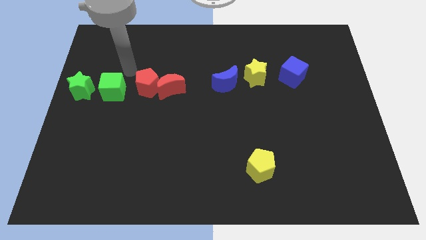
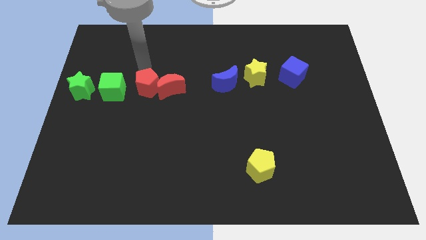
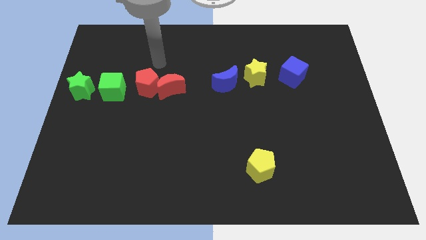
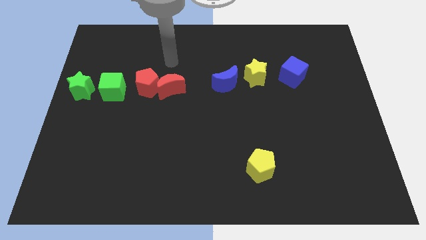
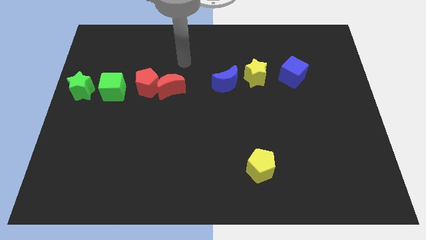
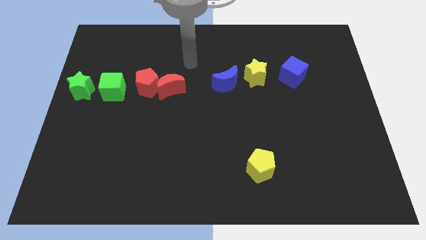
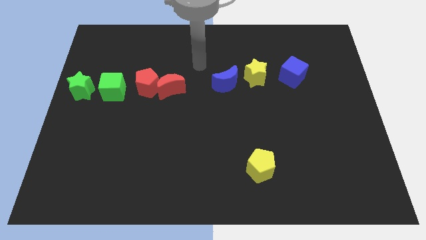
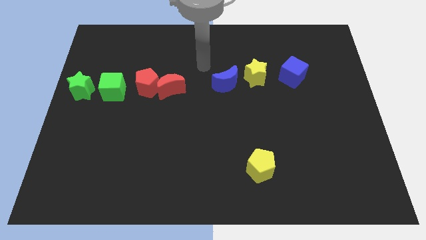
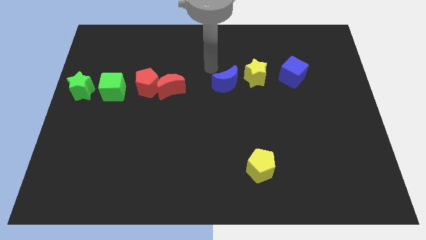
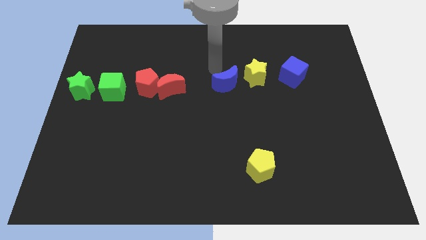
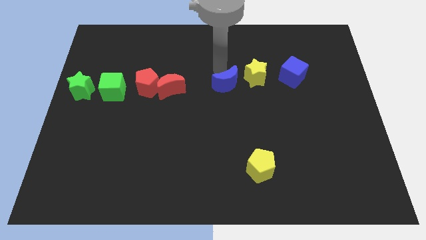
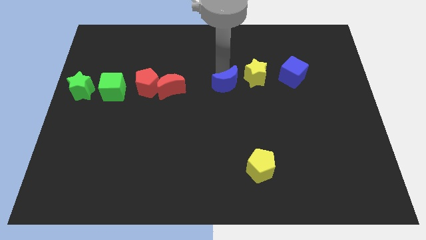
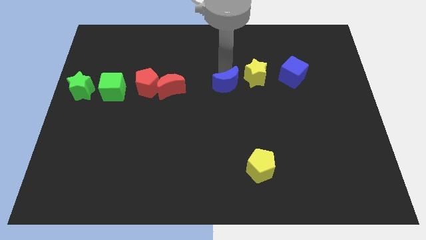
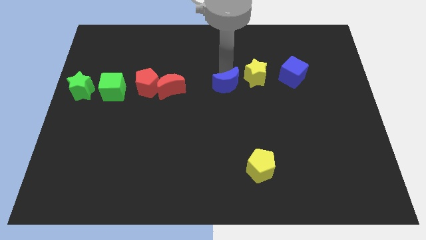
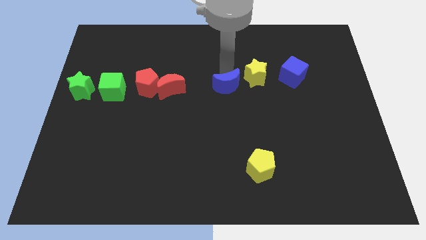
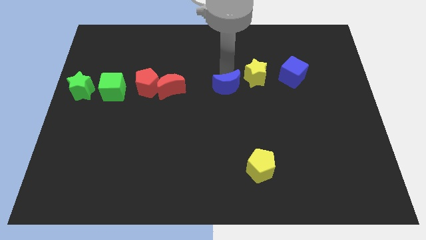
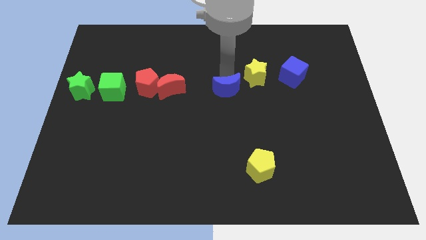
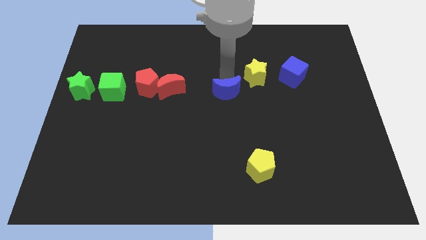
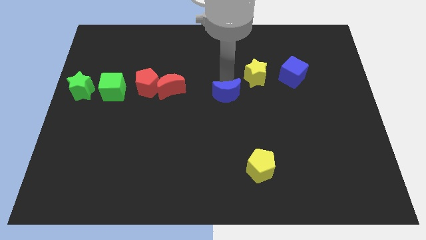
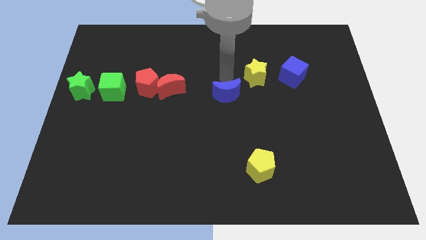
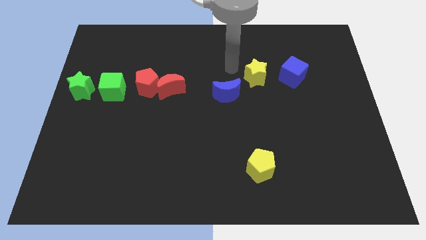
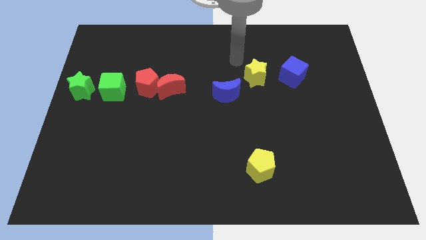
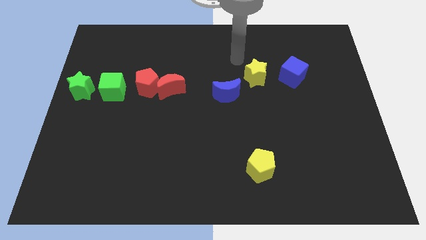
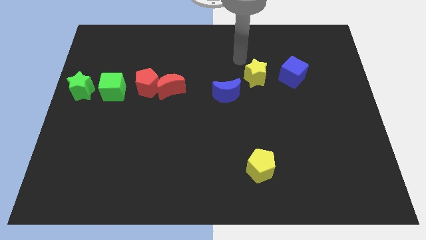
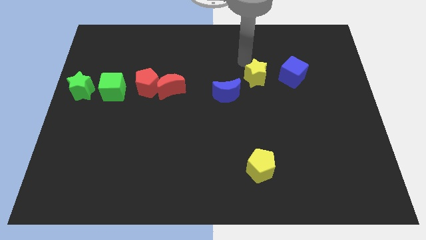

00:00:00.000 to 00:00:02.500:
push the blue crescent towards the bottom of the board

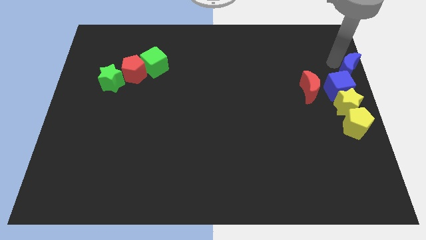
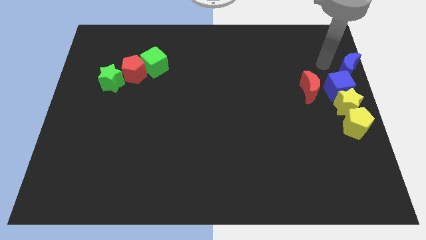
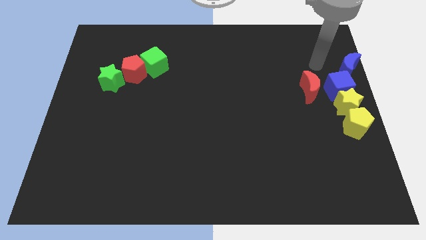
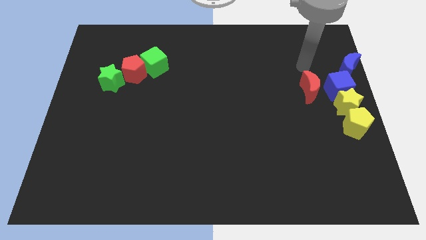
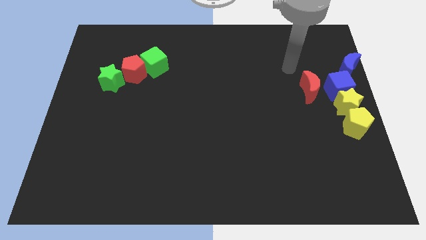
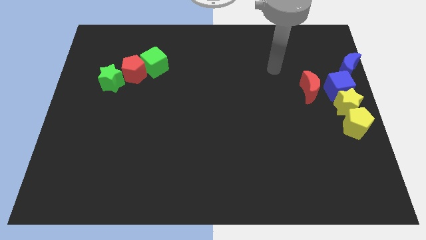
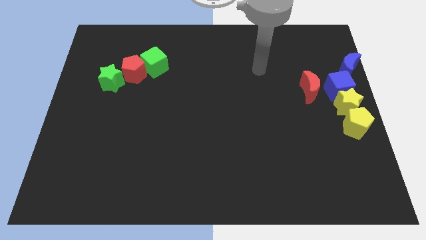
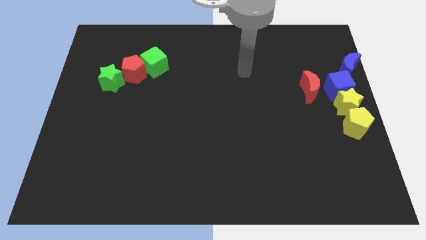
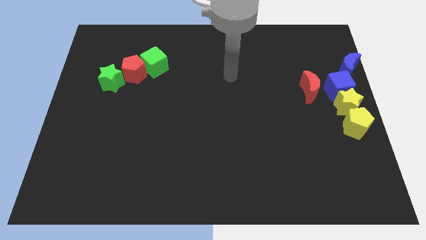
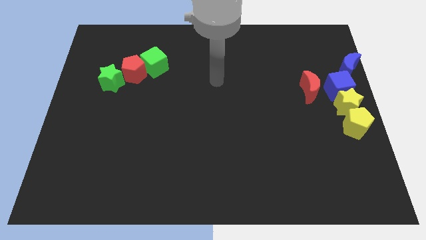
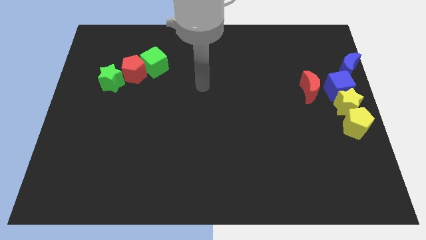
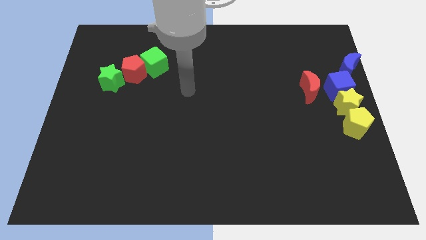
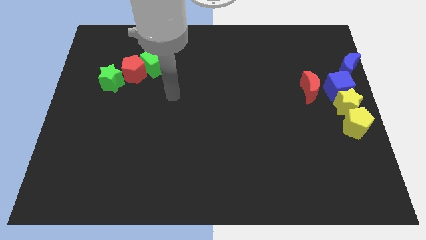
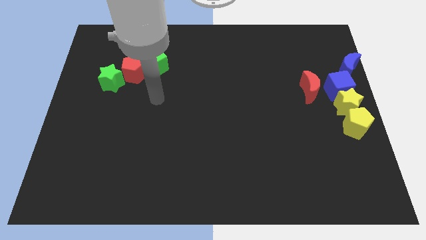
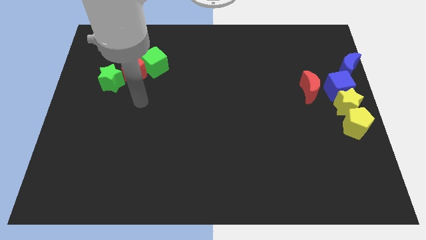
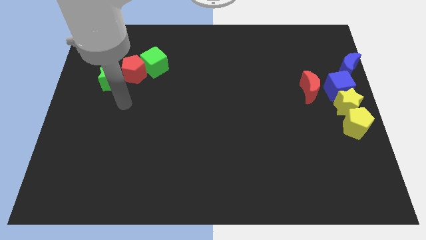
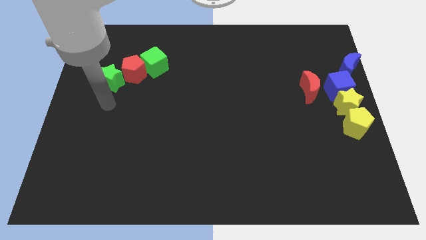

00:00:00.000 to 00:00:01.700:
go away from the blue moon

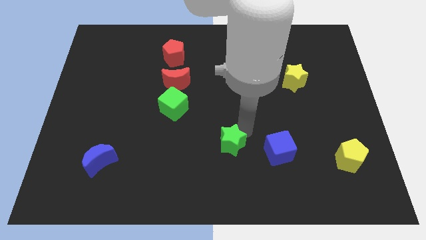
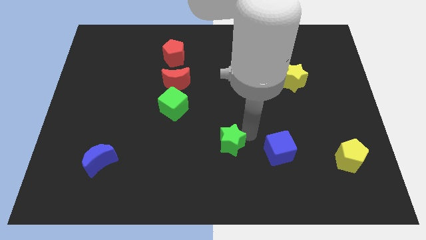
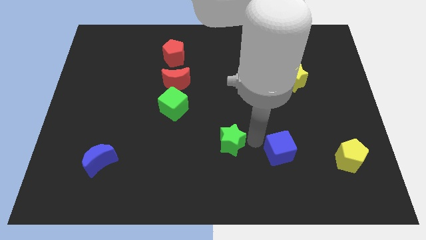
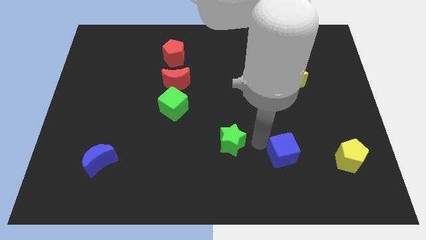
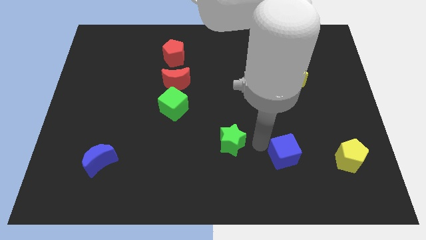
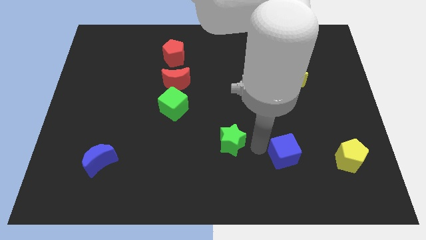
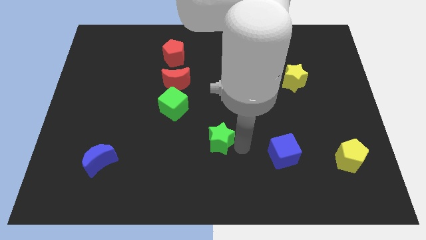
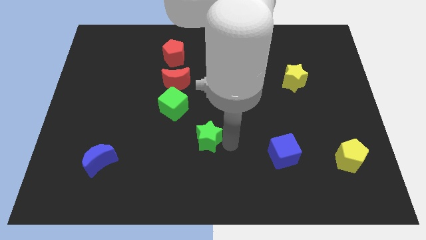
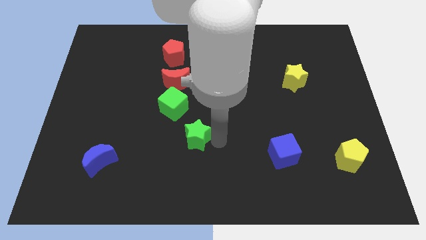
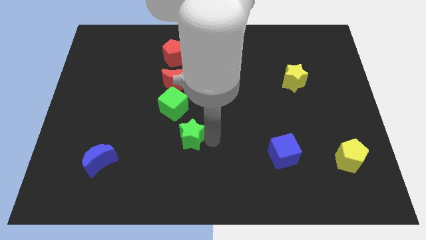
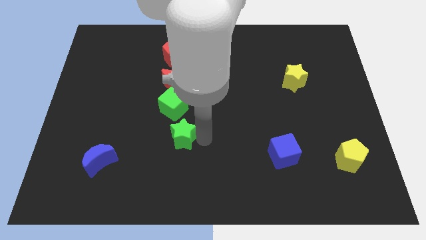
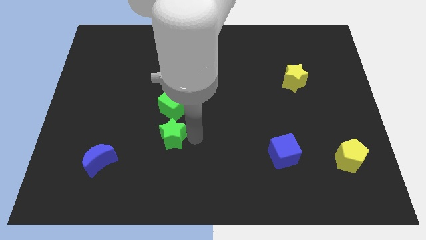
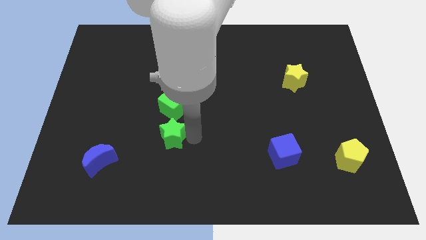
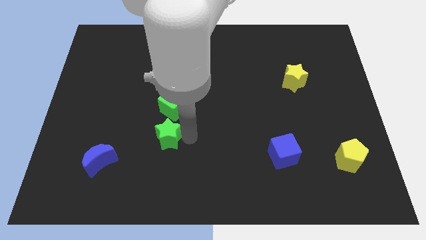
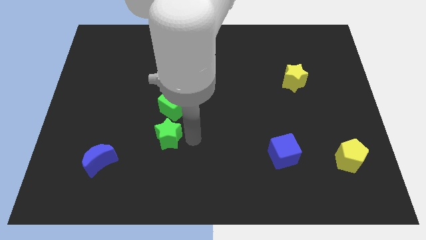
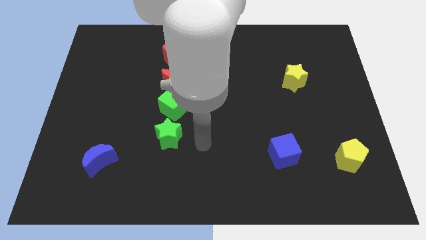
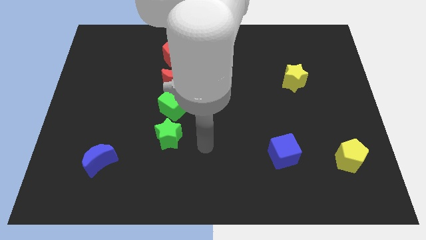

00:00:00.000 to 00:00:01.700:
place green star down to the green cube

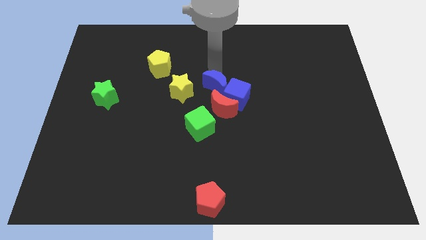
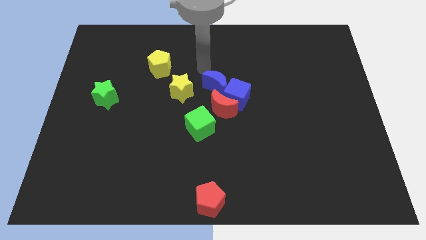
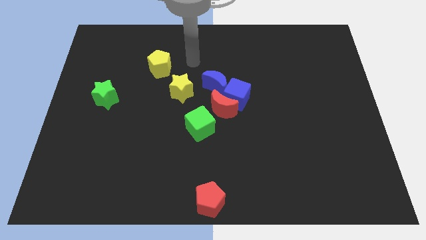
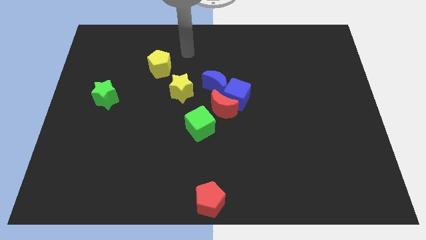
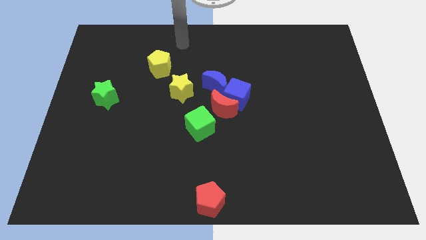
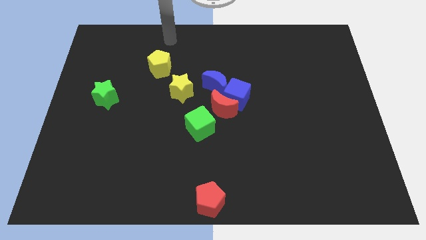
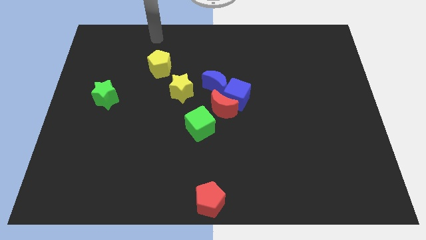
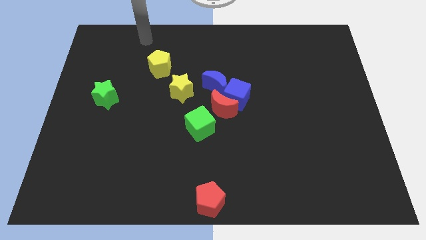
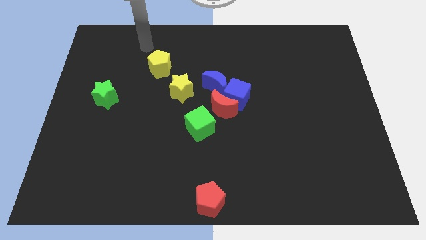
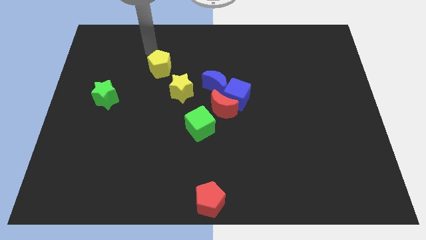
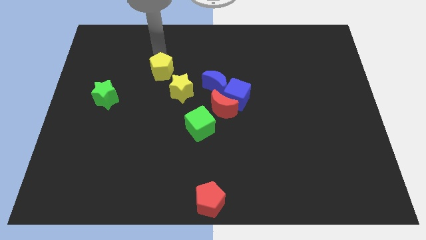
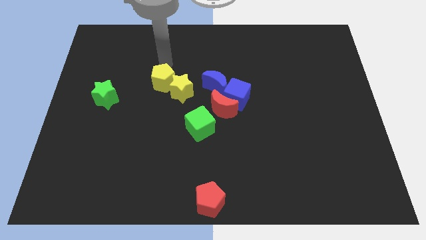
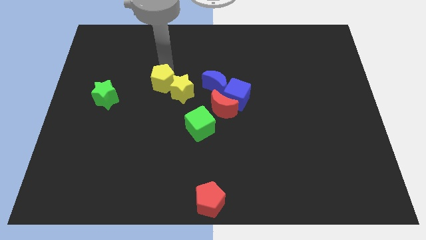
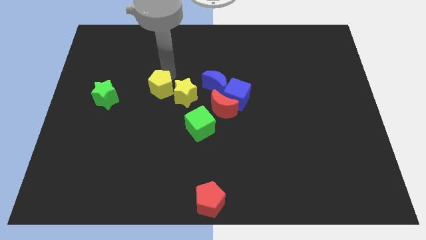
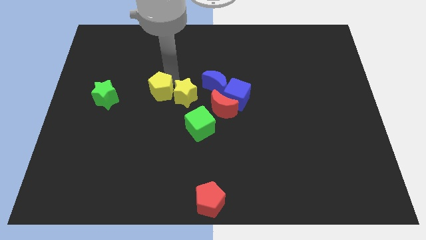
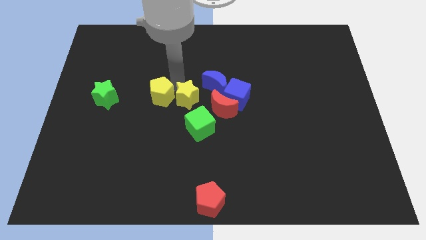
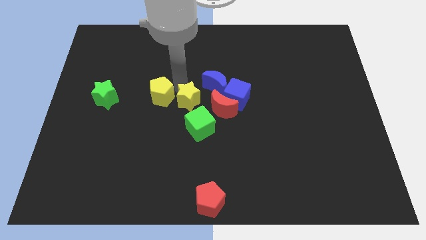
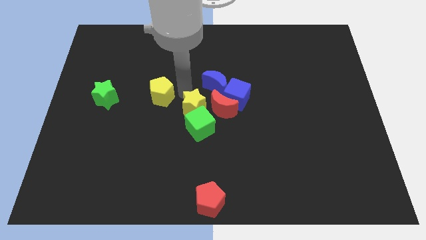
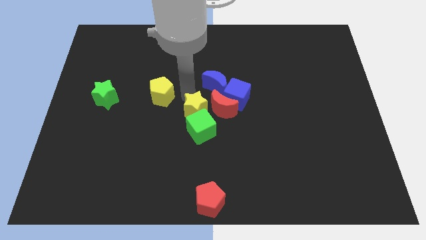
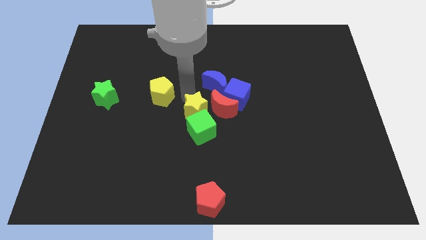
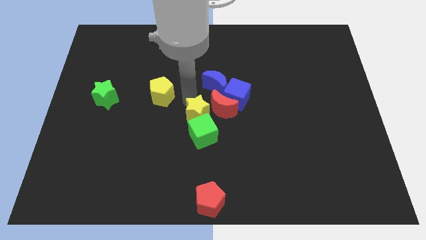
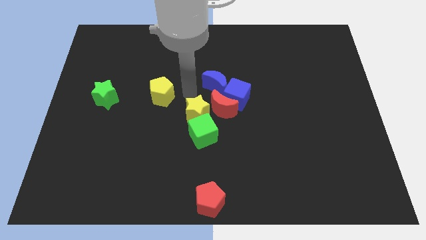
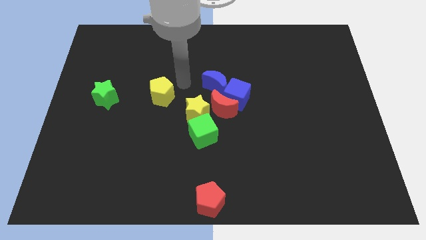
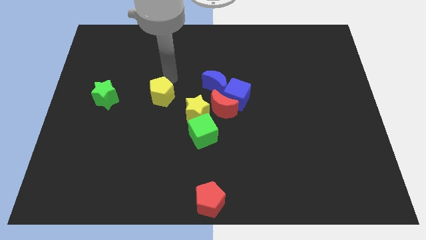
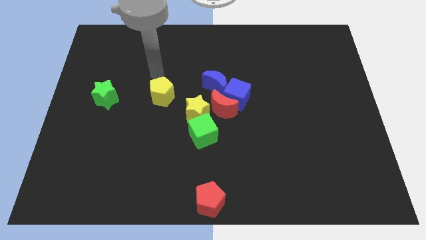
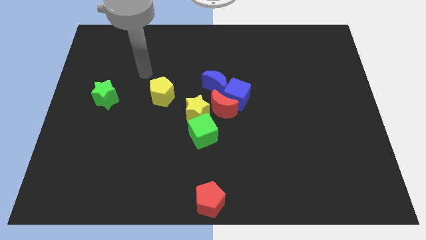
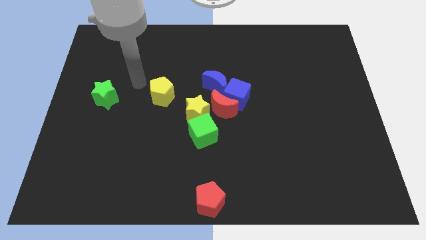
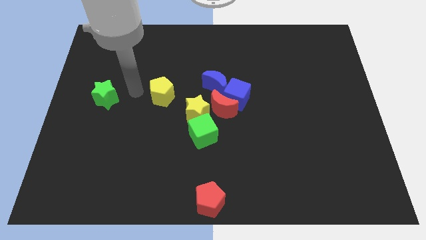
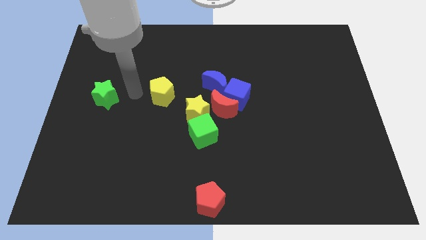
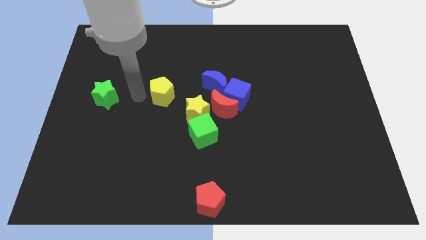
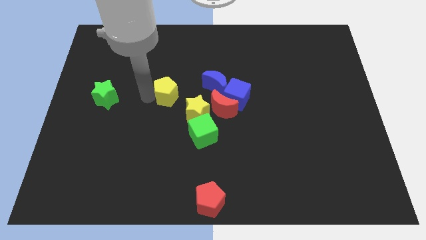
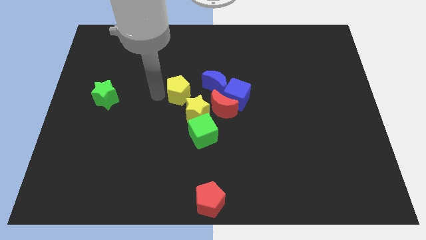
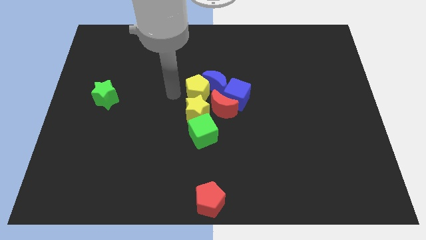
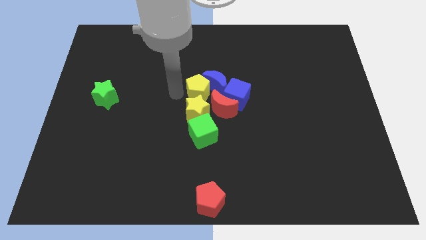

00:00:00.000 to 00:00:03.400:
push the yellow star and yellow pentagon towards the center of the board
